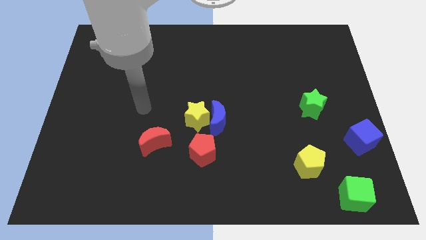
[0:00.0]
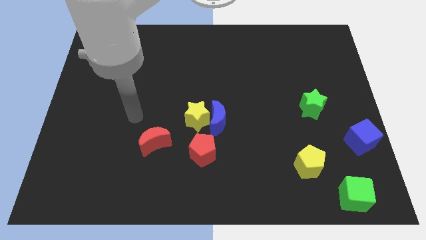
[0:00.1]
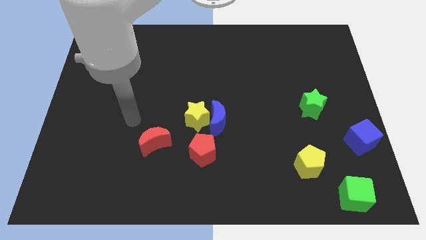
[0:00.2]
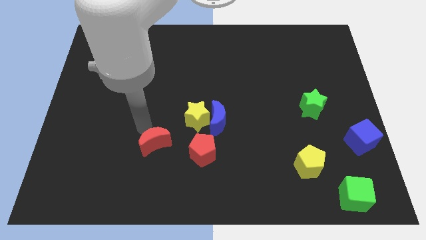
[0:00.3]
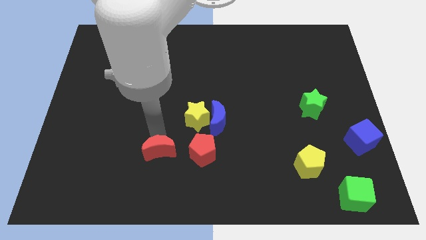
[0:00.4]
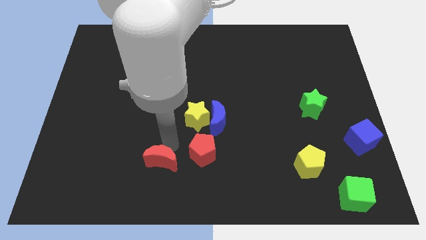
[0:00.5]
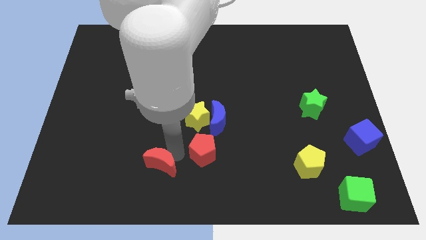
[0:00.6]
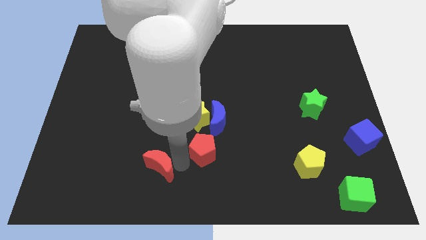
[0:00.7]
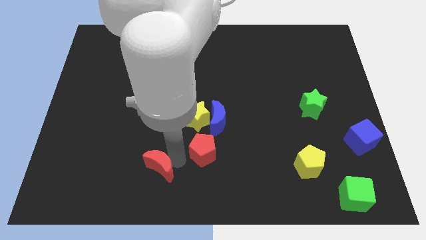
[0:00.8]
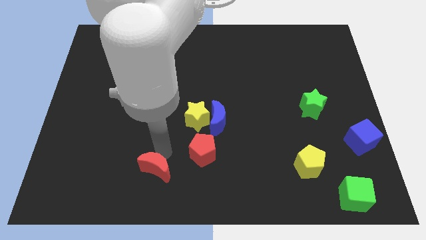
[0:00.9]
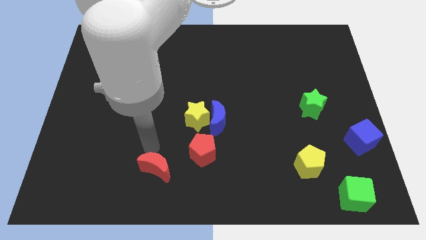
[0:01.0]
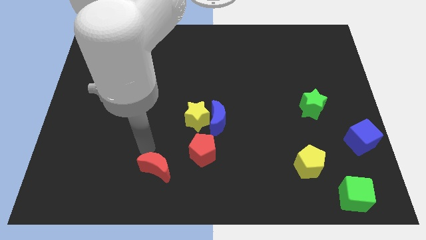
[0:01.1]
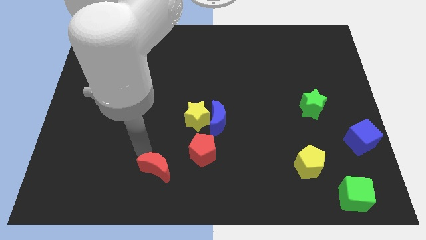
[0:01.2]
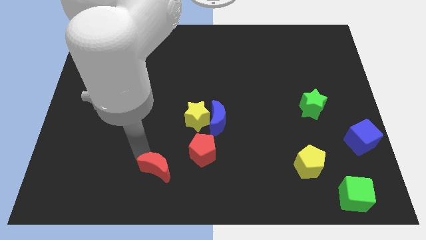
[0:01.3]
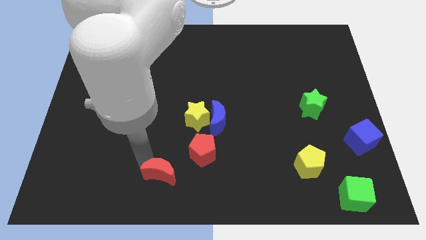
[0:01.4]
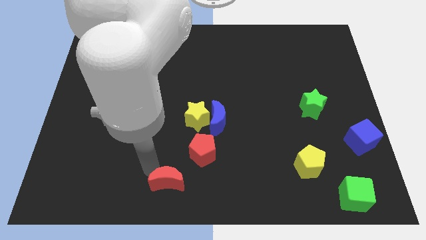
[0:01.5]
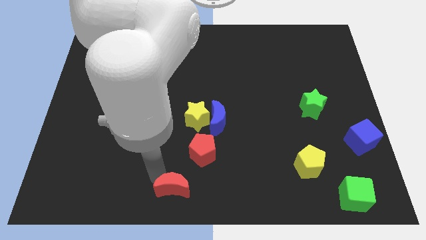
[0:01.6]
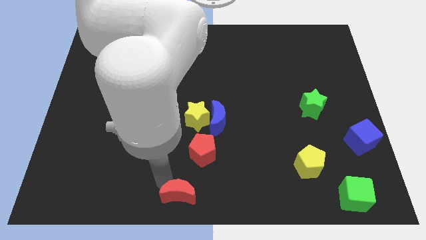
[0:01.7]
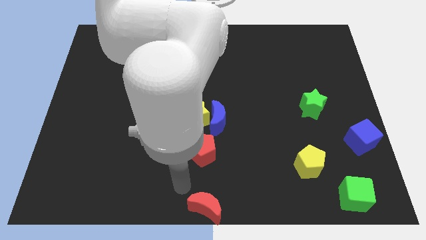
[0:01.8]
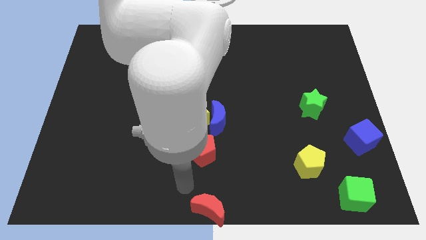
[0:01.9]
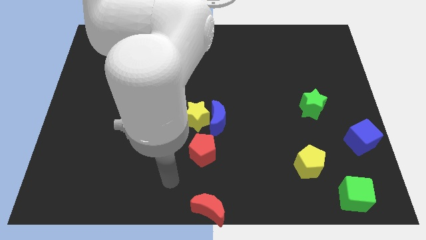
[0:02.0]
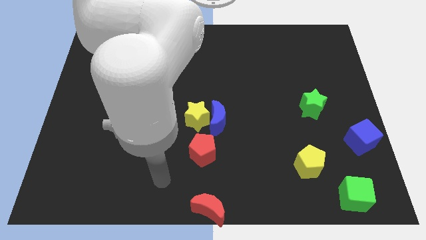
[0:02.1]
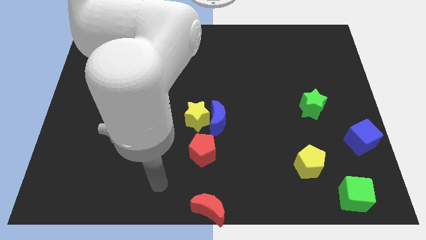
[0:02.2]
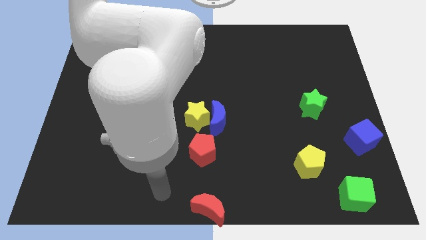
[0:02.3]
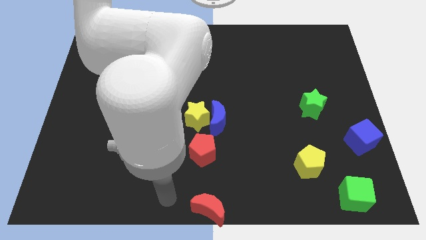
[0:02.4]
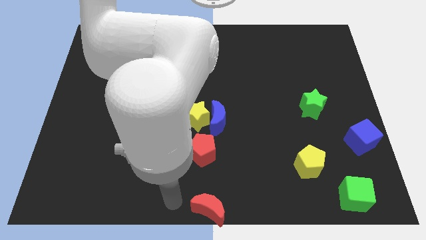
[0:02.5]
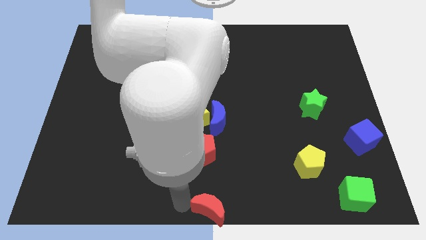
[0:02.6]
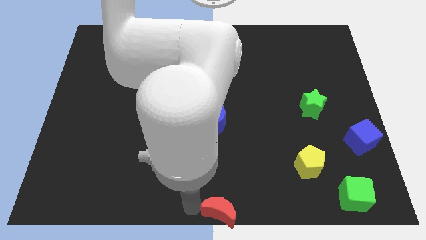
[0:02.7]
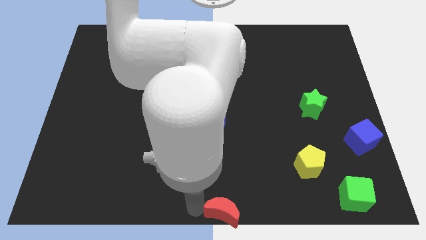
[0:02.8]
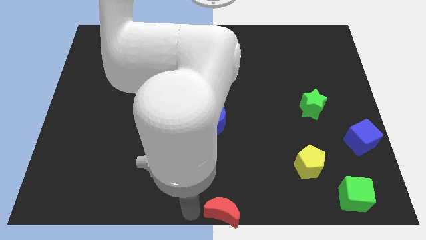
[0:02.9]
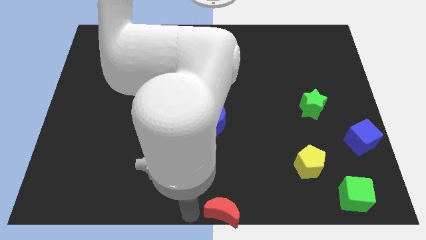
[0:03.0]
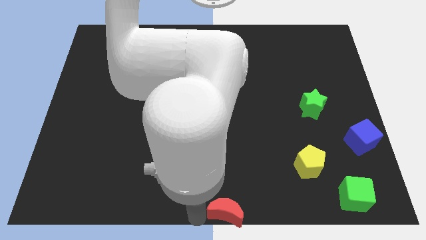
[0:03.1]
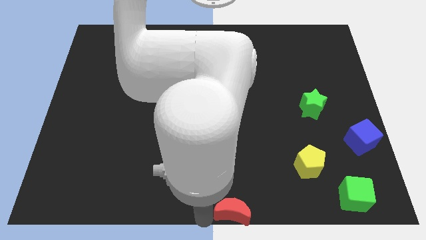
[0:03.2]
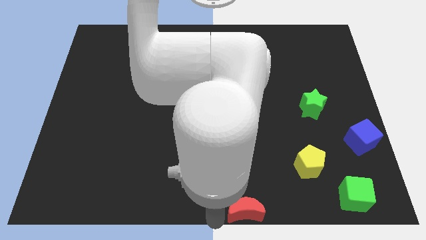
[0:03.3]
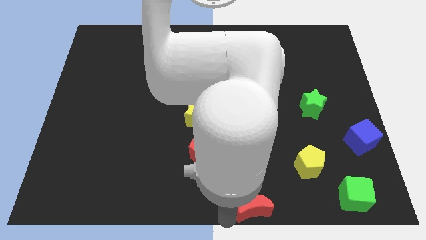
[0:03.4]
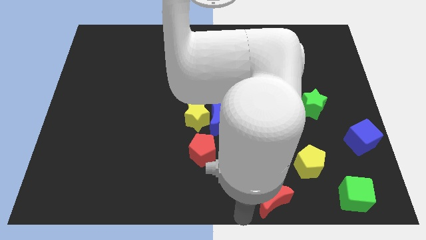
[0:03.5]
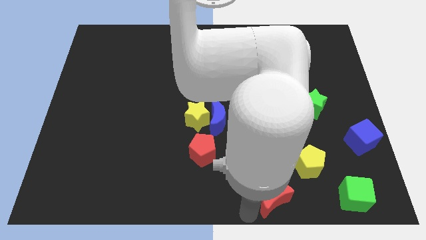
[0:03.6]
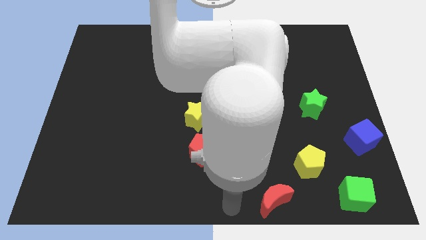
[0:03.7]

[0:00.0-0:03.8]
place the red moon to the bottom left of the yellow pentagon

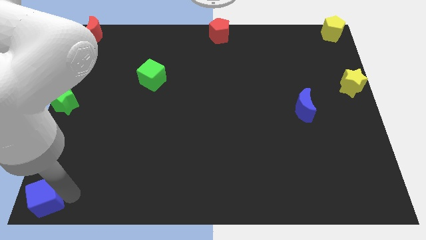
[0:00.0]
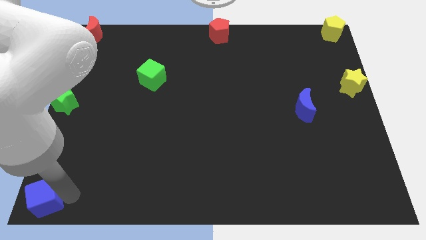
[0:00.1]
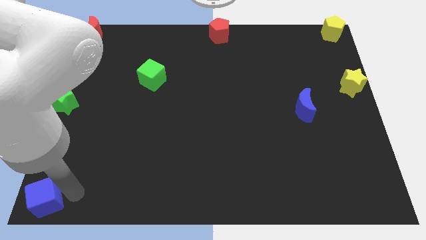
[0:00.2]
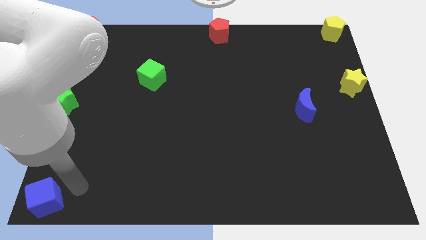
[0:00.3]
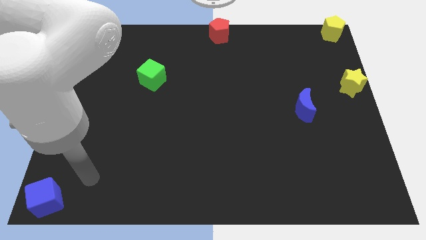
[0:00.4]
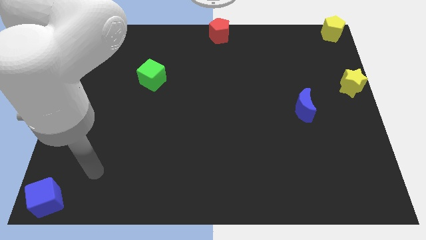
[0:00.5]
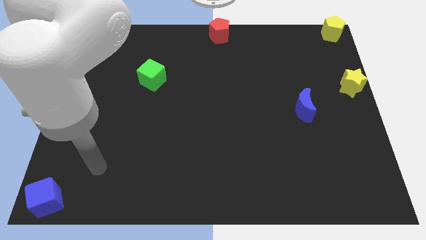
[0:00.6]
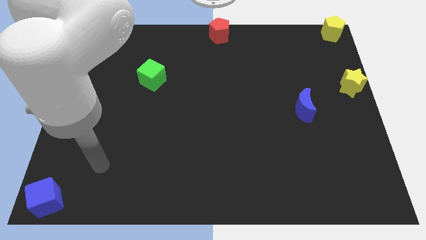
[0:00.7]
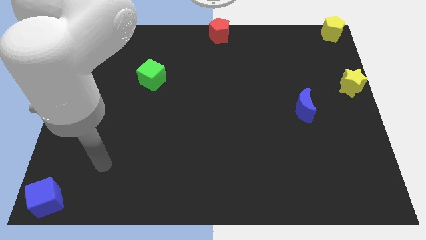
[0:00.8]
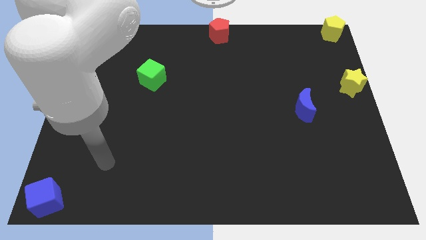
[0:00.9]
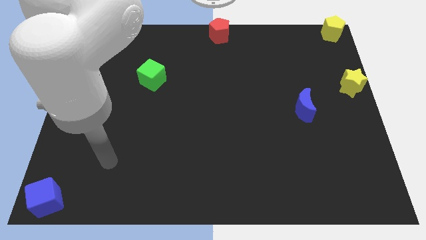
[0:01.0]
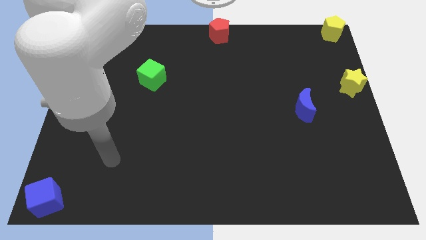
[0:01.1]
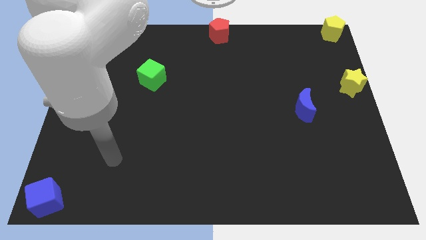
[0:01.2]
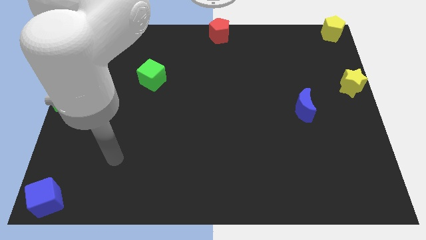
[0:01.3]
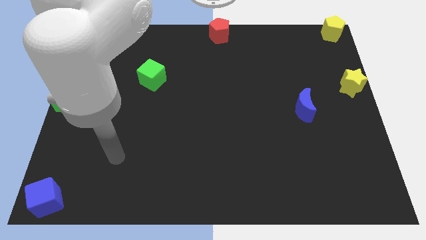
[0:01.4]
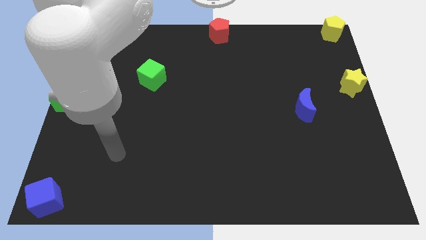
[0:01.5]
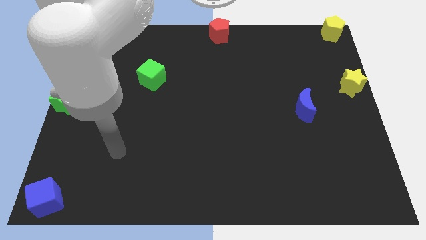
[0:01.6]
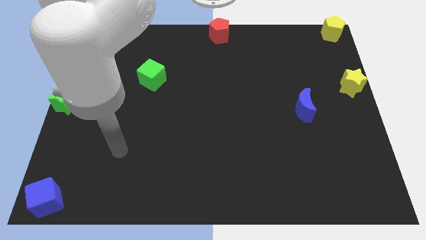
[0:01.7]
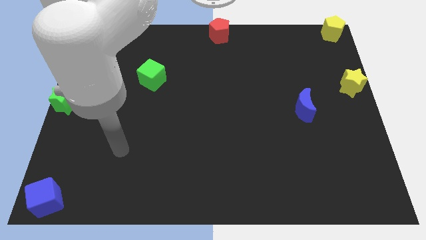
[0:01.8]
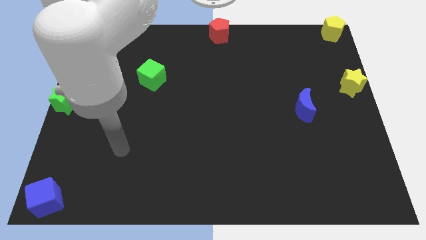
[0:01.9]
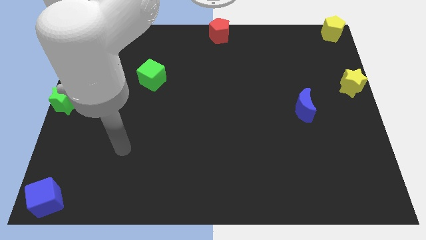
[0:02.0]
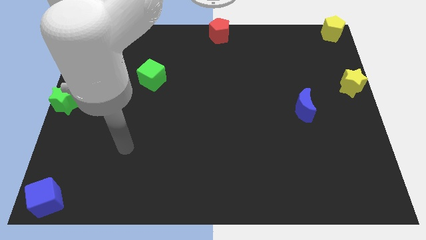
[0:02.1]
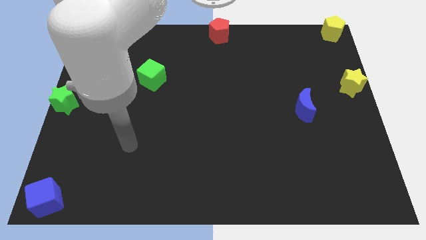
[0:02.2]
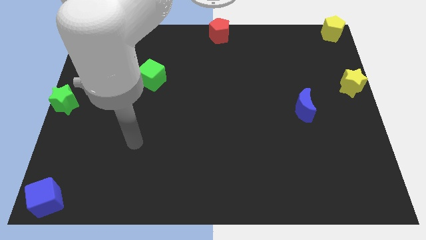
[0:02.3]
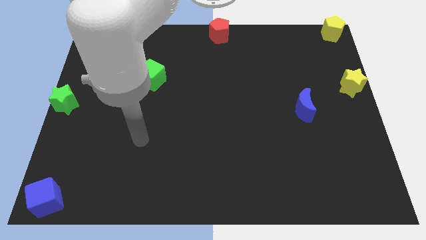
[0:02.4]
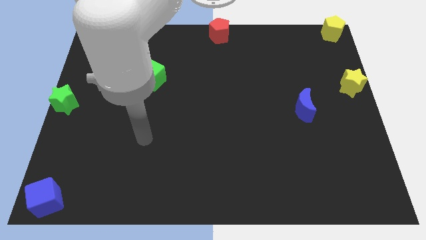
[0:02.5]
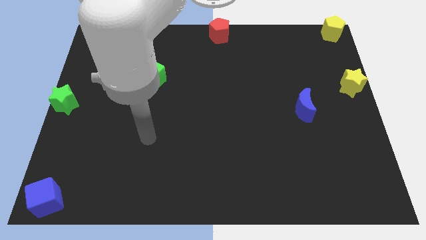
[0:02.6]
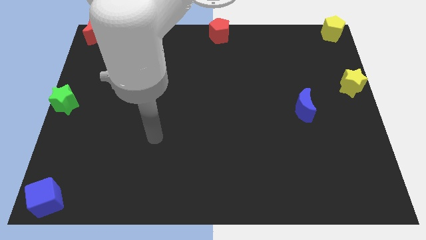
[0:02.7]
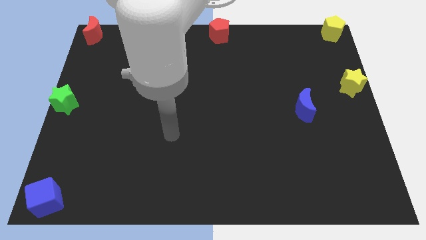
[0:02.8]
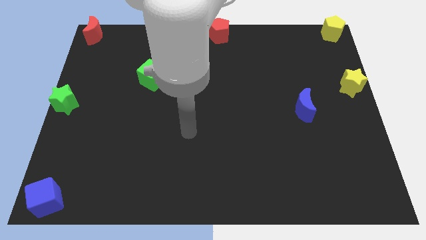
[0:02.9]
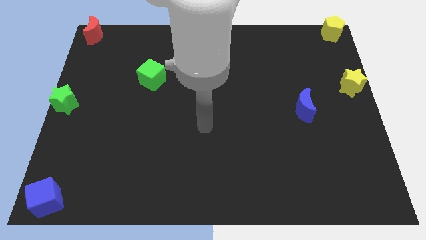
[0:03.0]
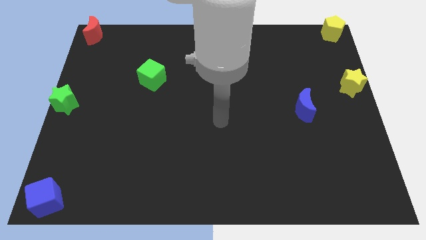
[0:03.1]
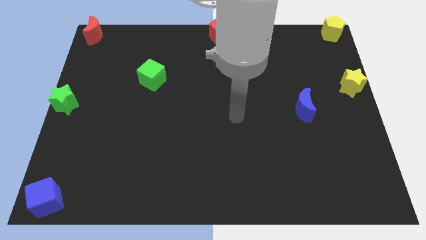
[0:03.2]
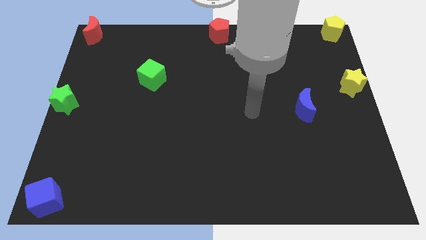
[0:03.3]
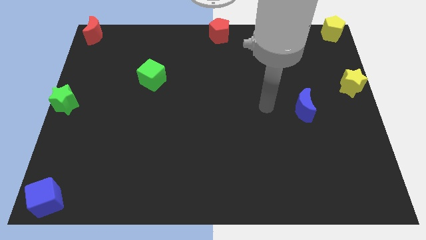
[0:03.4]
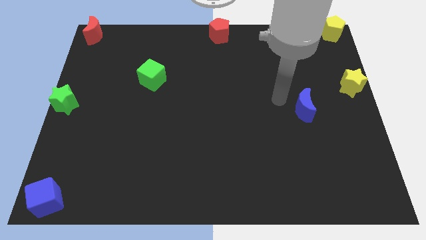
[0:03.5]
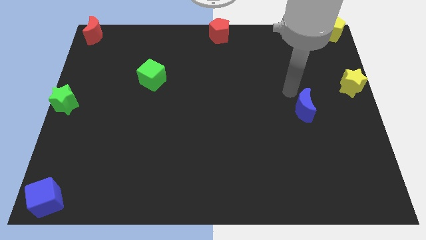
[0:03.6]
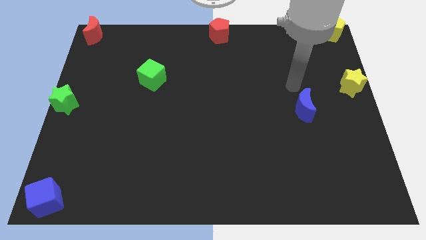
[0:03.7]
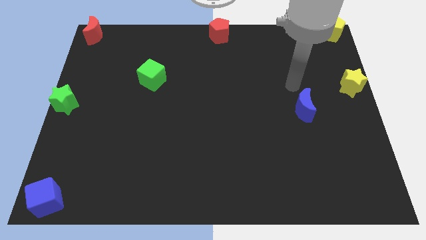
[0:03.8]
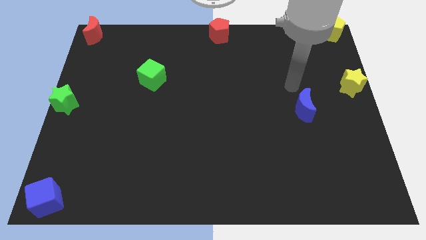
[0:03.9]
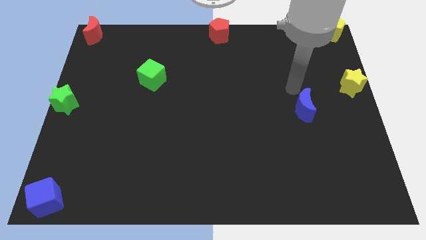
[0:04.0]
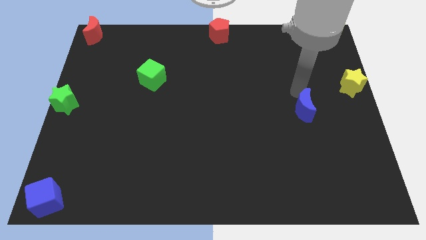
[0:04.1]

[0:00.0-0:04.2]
move your arm towards the blue moon

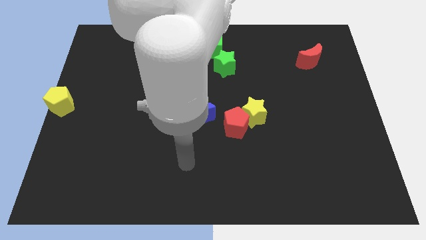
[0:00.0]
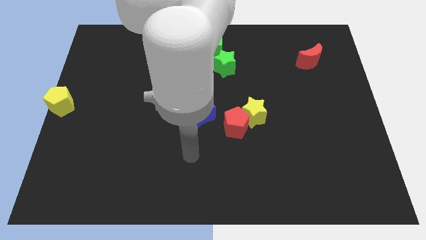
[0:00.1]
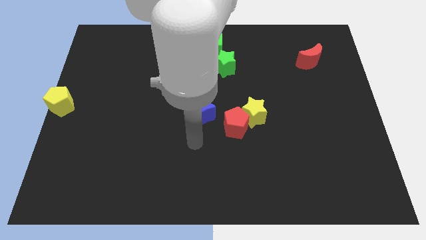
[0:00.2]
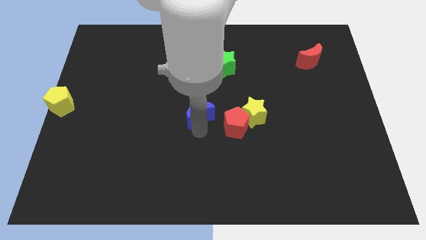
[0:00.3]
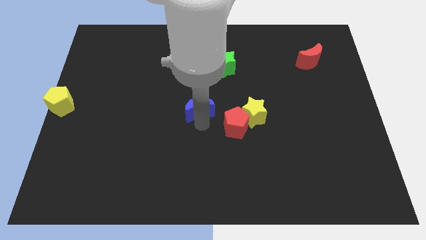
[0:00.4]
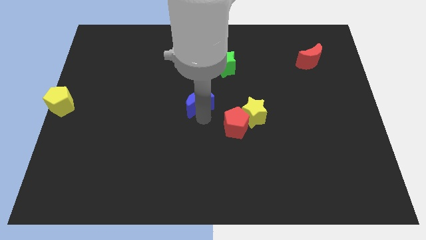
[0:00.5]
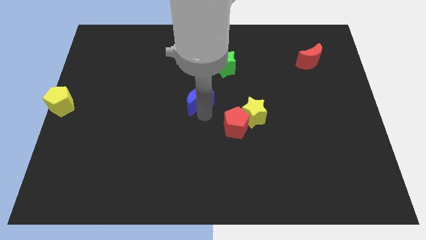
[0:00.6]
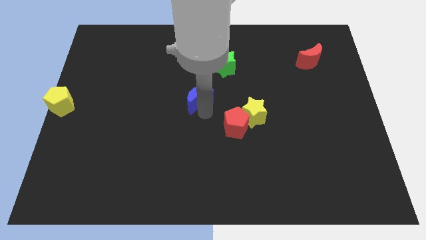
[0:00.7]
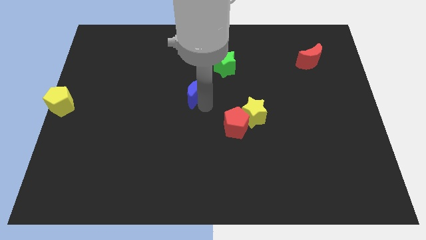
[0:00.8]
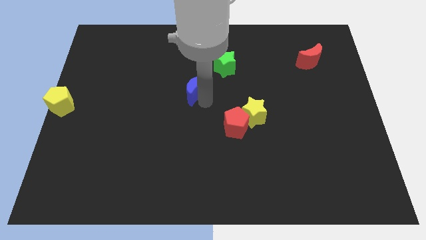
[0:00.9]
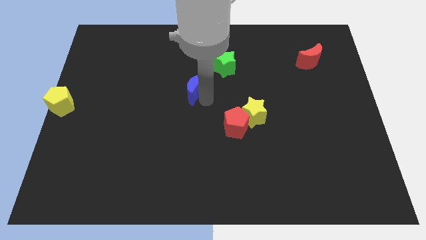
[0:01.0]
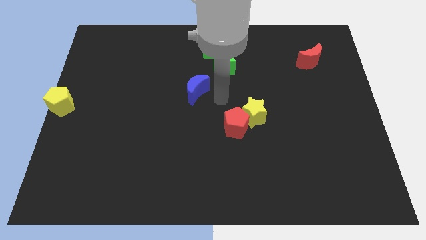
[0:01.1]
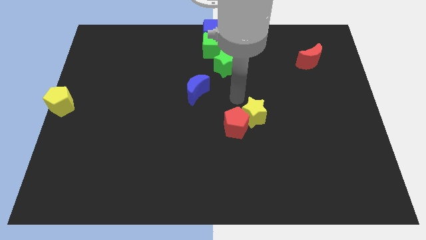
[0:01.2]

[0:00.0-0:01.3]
push the blue crescent close to the green star
